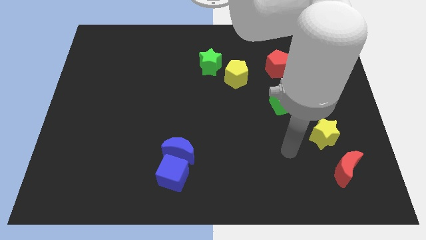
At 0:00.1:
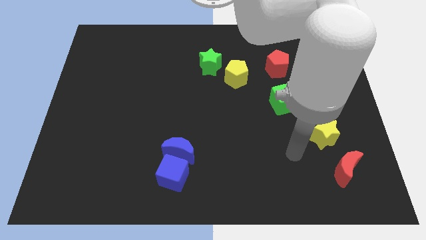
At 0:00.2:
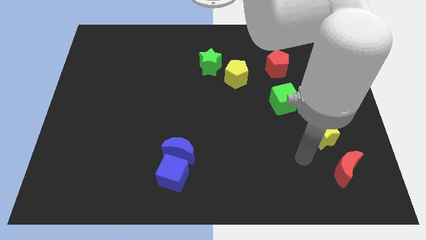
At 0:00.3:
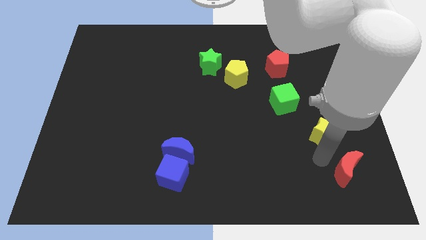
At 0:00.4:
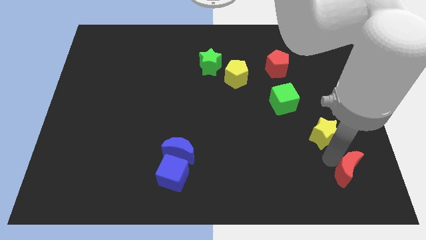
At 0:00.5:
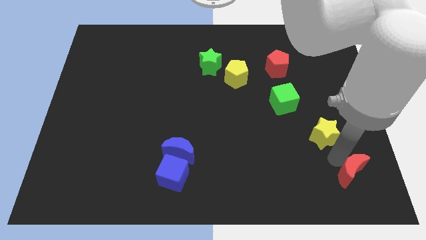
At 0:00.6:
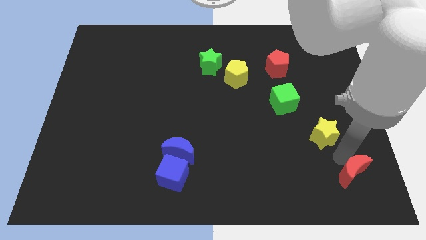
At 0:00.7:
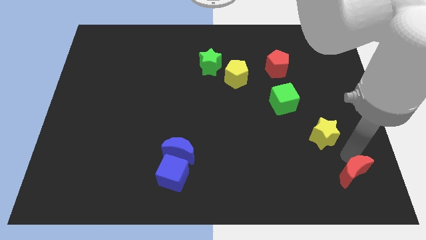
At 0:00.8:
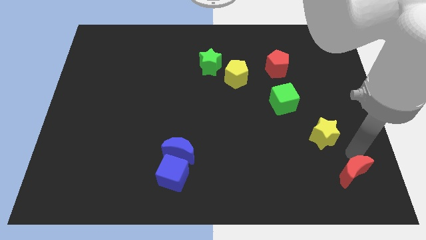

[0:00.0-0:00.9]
touch the red pentagon

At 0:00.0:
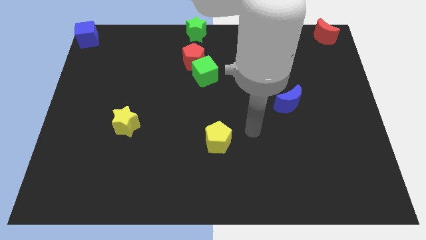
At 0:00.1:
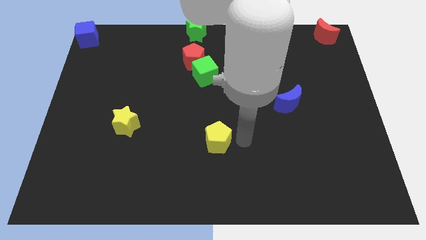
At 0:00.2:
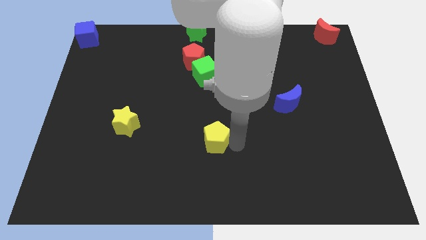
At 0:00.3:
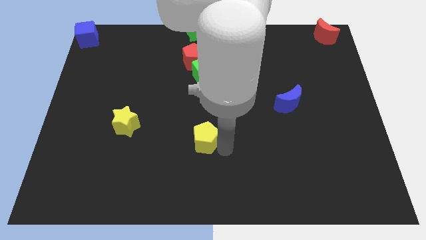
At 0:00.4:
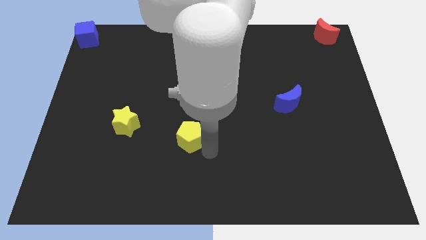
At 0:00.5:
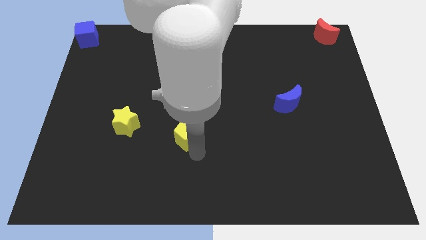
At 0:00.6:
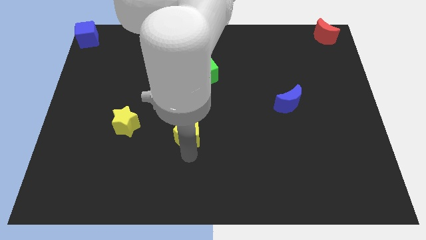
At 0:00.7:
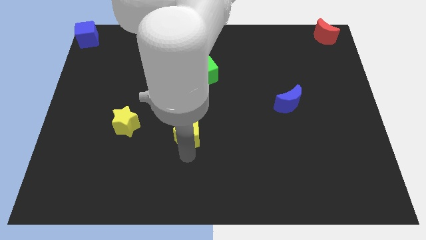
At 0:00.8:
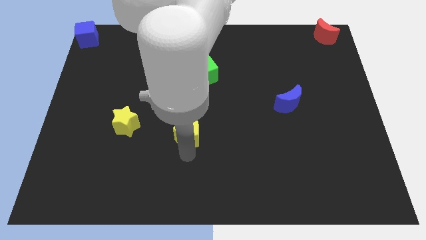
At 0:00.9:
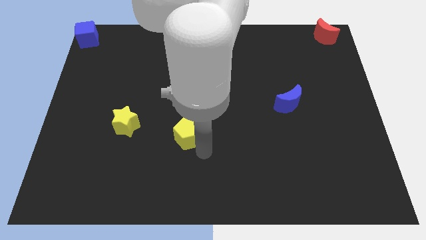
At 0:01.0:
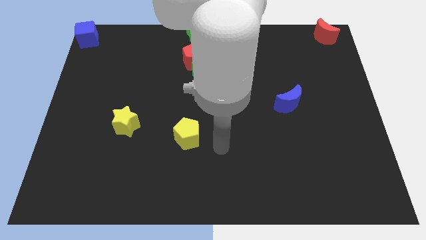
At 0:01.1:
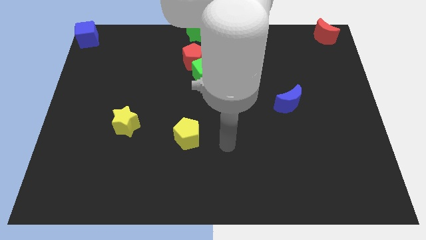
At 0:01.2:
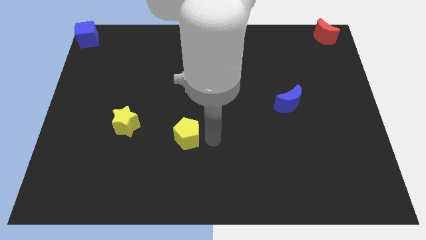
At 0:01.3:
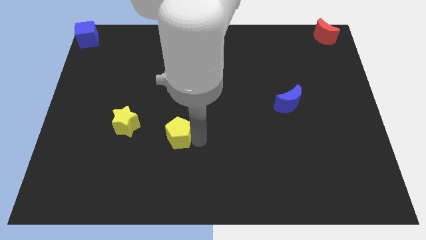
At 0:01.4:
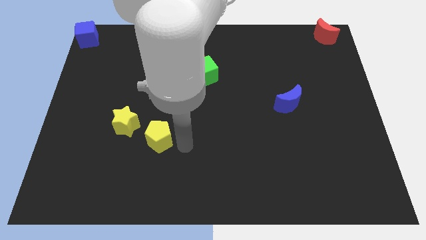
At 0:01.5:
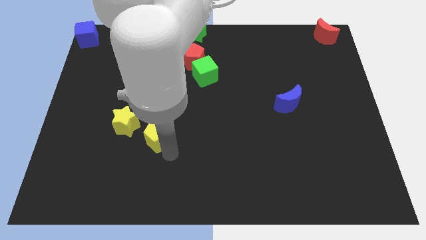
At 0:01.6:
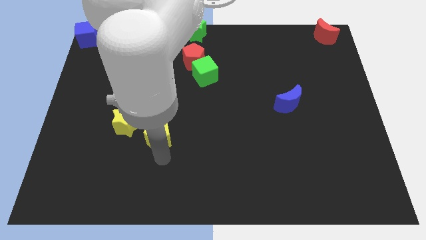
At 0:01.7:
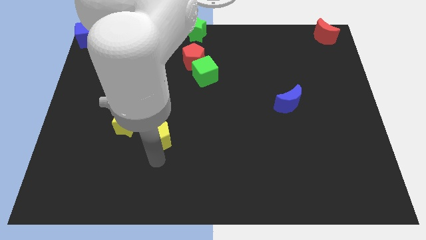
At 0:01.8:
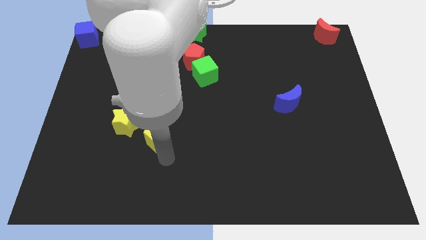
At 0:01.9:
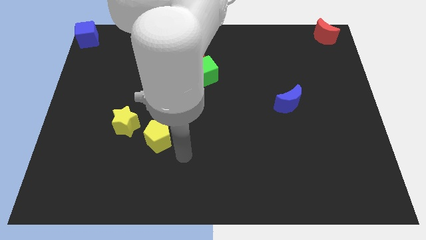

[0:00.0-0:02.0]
move the yellow pentagon to the bottom right side of the yellow star

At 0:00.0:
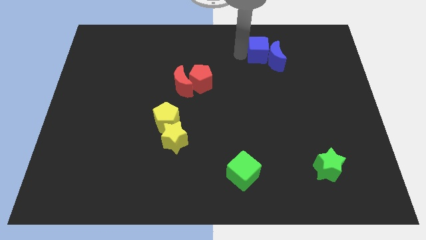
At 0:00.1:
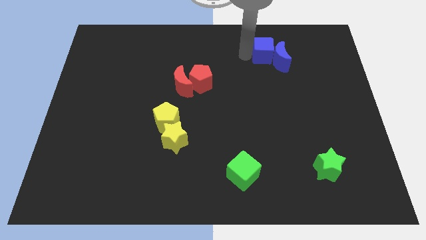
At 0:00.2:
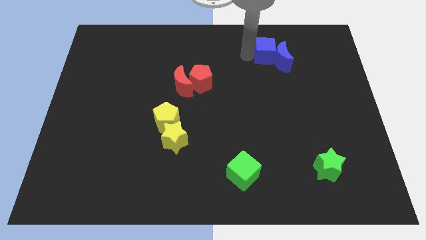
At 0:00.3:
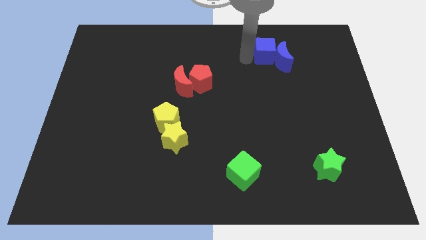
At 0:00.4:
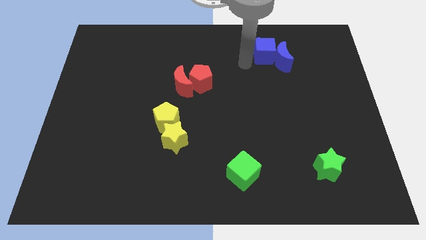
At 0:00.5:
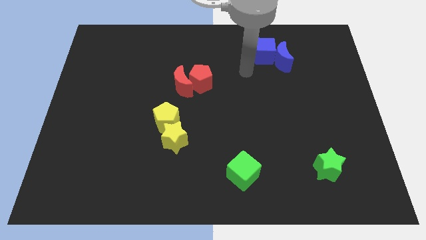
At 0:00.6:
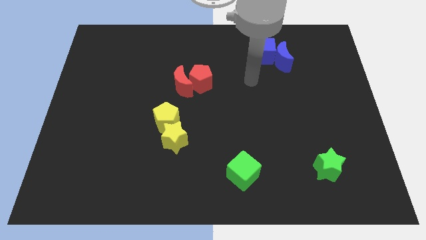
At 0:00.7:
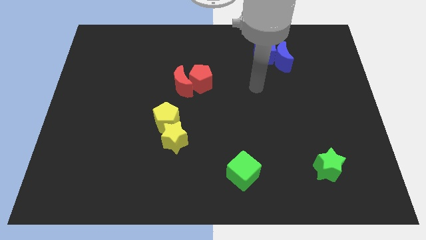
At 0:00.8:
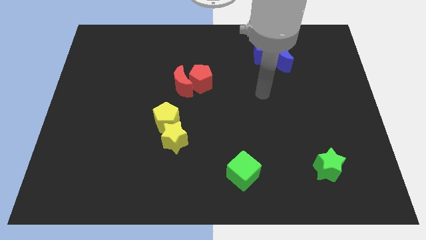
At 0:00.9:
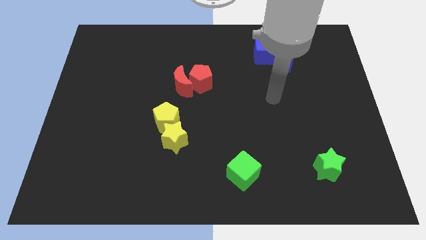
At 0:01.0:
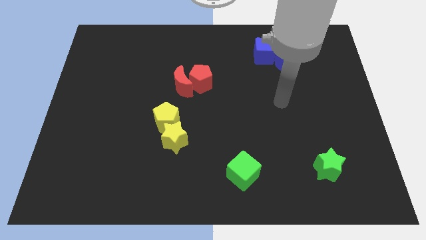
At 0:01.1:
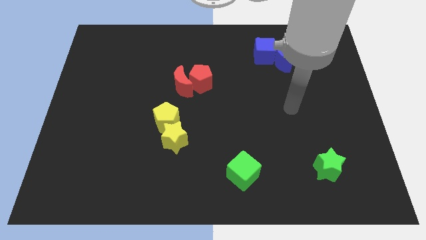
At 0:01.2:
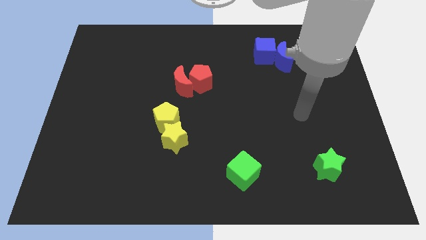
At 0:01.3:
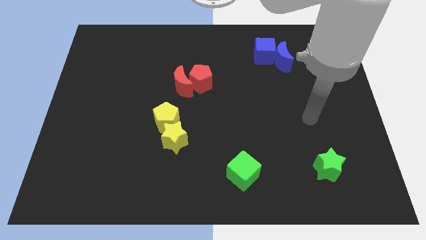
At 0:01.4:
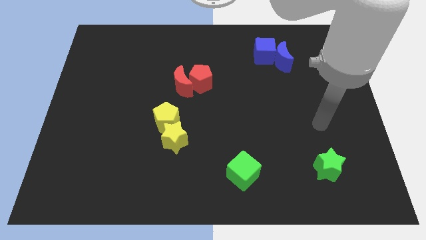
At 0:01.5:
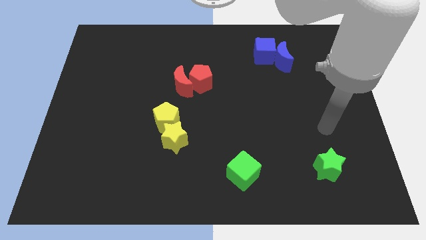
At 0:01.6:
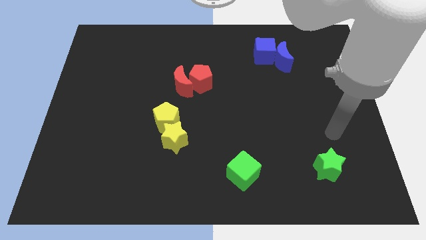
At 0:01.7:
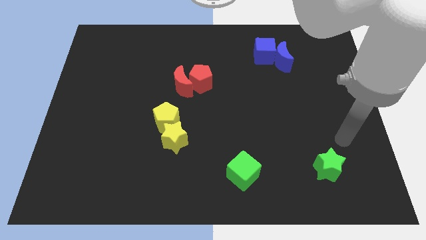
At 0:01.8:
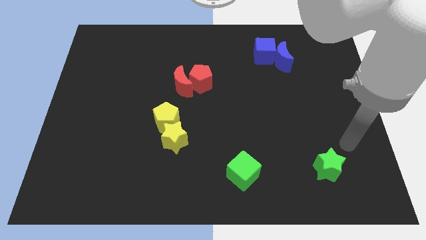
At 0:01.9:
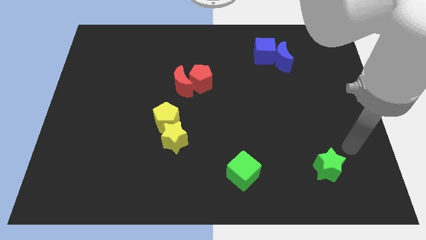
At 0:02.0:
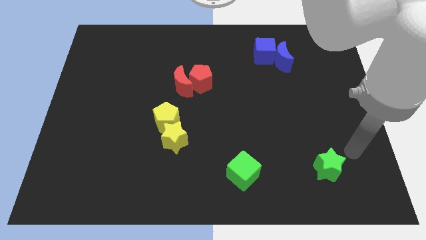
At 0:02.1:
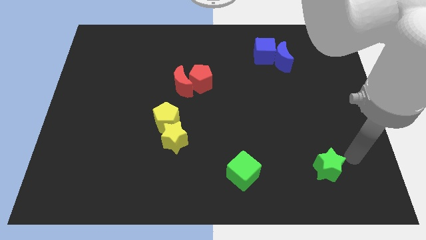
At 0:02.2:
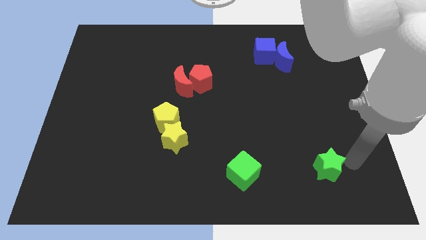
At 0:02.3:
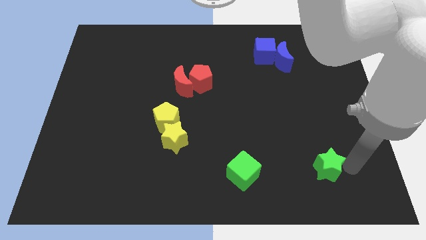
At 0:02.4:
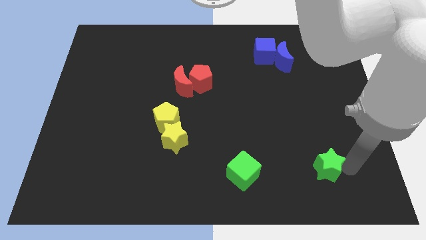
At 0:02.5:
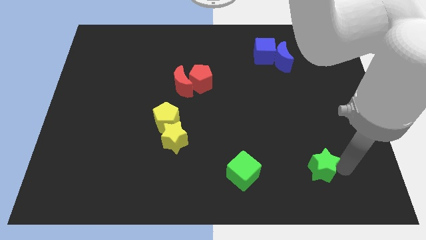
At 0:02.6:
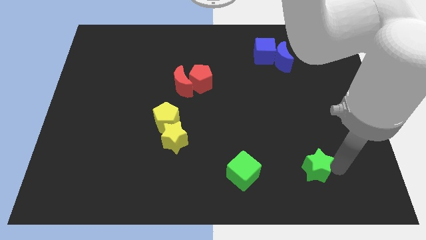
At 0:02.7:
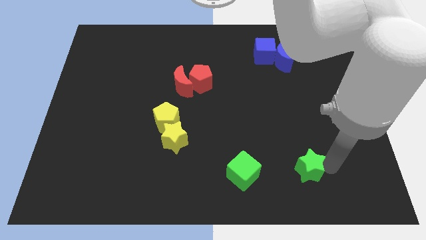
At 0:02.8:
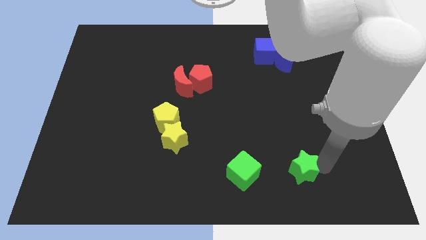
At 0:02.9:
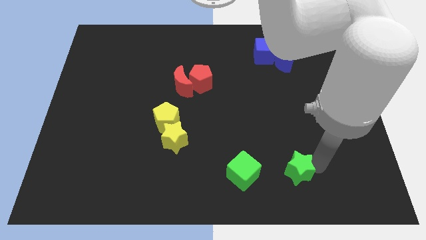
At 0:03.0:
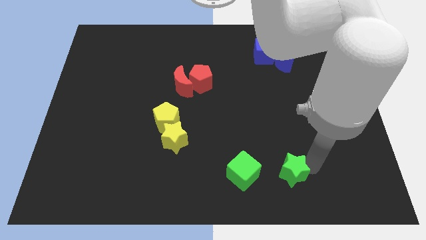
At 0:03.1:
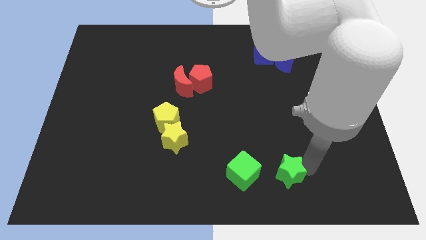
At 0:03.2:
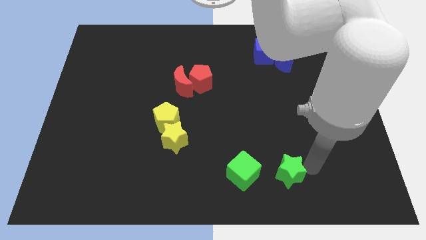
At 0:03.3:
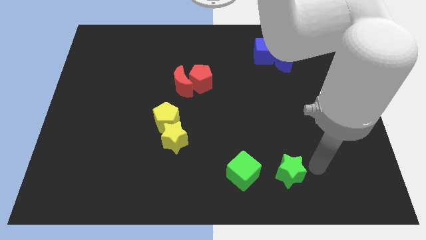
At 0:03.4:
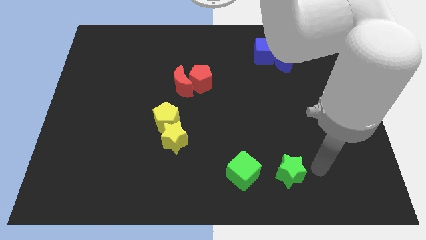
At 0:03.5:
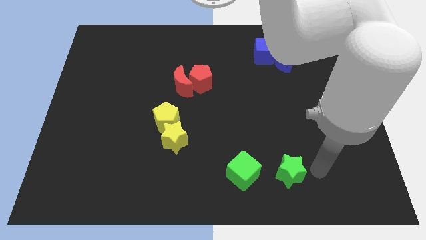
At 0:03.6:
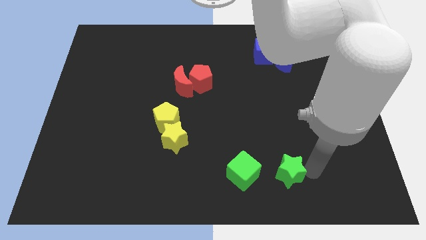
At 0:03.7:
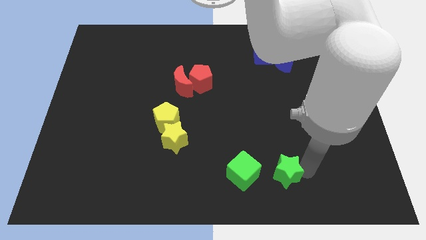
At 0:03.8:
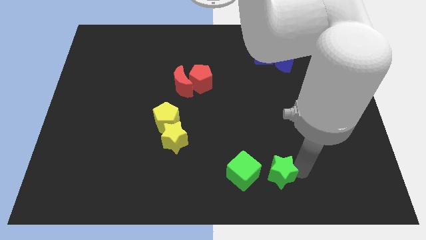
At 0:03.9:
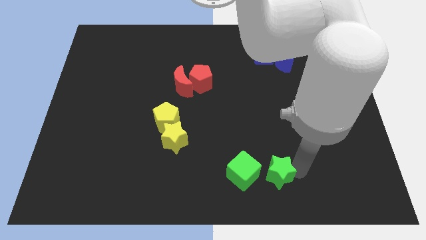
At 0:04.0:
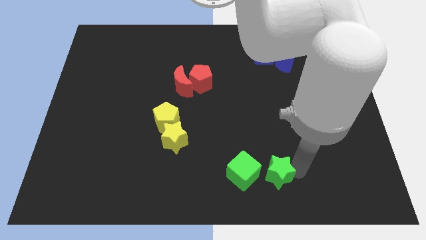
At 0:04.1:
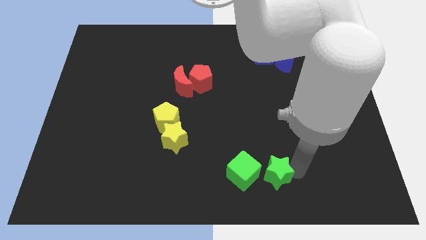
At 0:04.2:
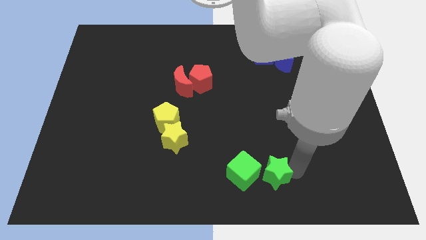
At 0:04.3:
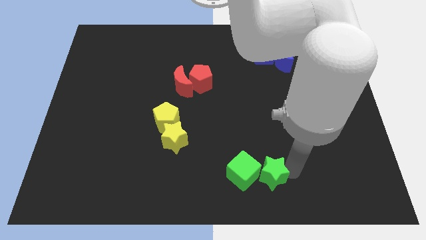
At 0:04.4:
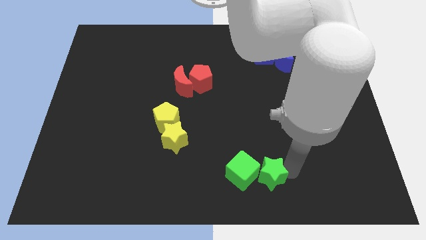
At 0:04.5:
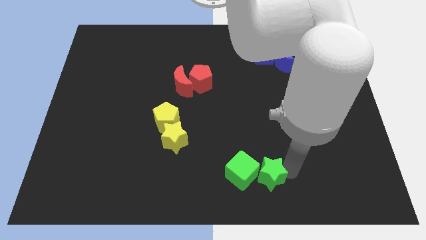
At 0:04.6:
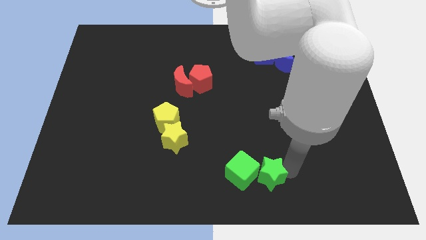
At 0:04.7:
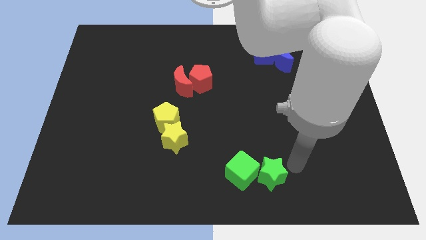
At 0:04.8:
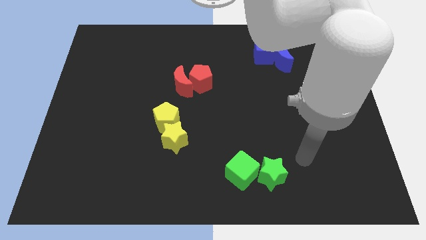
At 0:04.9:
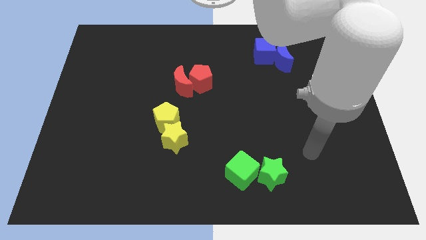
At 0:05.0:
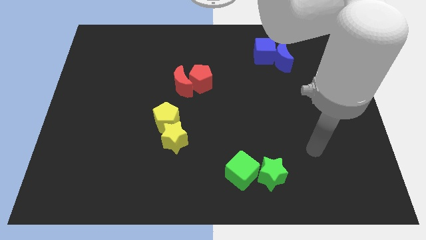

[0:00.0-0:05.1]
move the green star to the right side of the green cube

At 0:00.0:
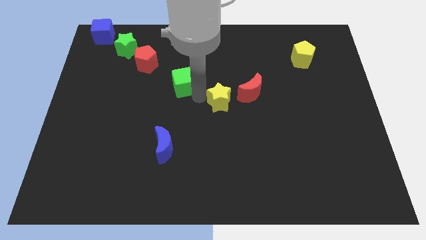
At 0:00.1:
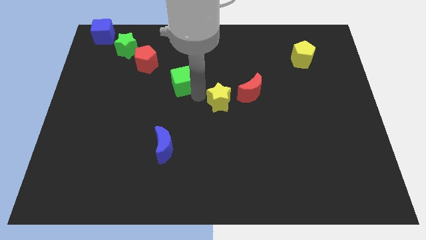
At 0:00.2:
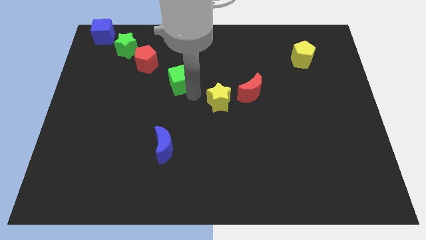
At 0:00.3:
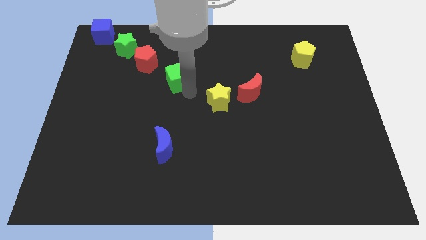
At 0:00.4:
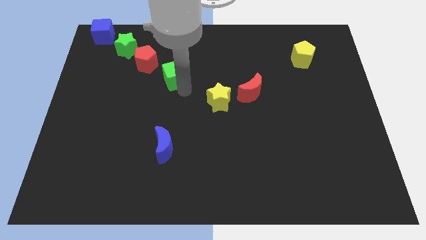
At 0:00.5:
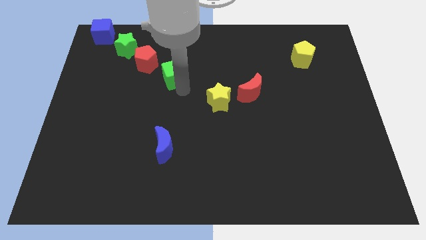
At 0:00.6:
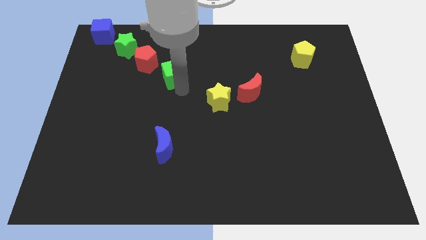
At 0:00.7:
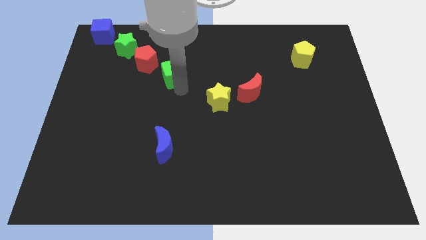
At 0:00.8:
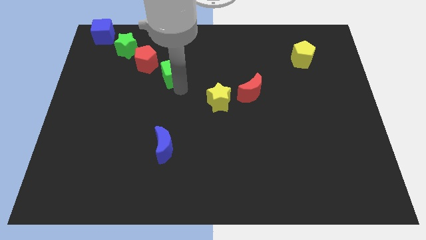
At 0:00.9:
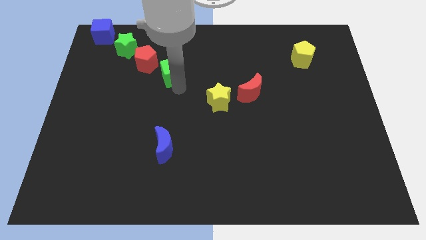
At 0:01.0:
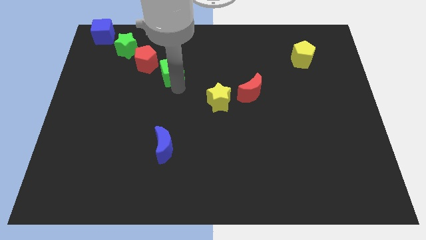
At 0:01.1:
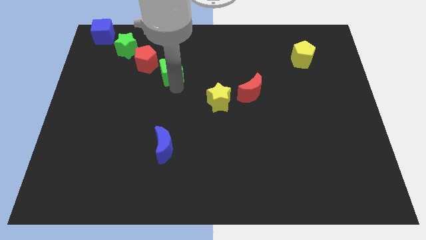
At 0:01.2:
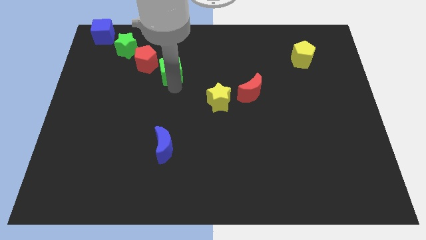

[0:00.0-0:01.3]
put green cube in between red pentagon and yellow star
